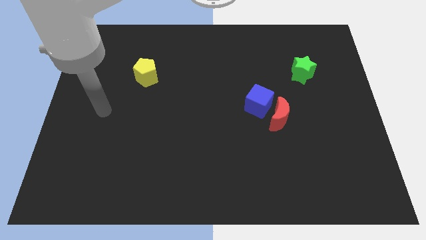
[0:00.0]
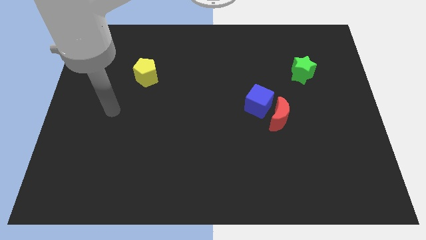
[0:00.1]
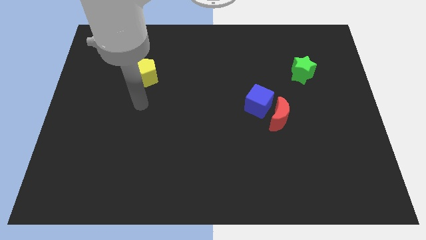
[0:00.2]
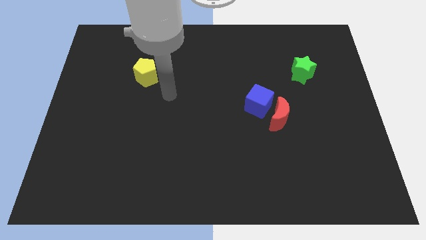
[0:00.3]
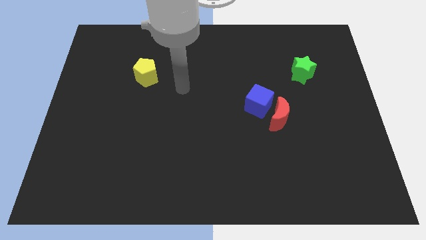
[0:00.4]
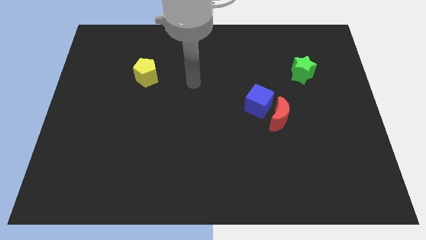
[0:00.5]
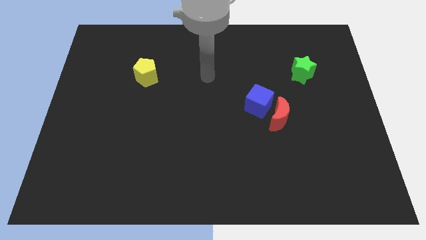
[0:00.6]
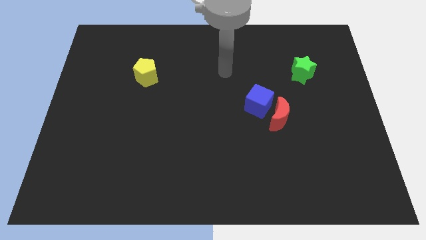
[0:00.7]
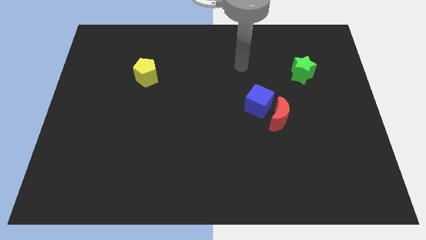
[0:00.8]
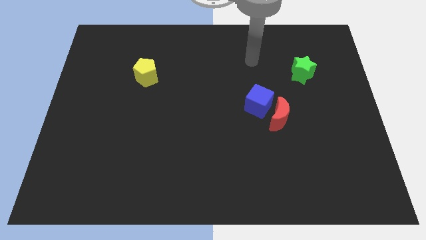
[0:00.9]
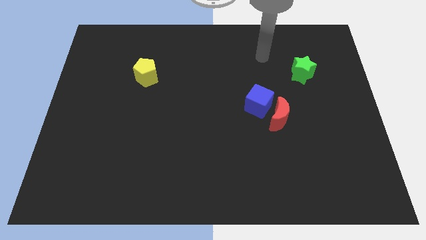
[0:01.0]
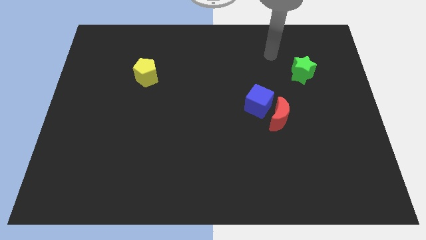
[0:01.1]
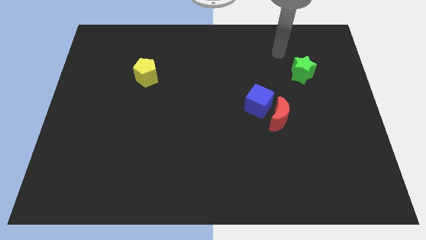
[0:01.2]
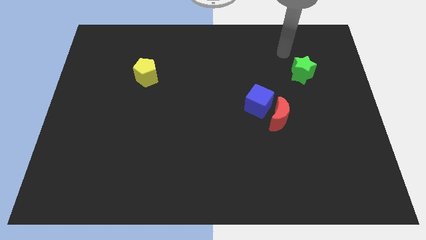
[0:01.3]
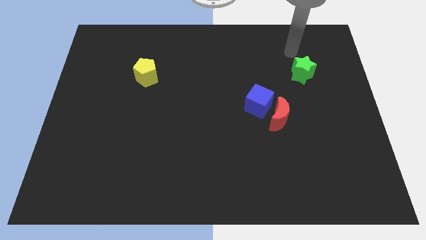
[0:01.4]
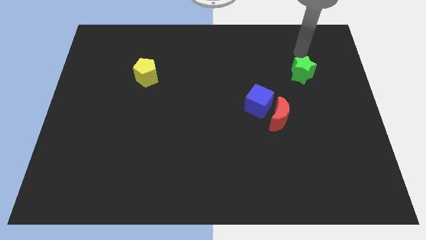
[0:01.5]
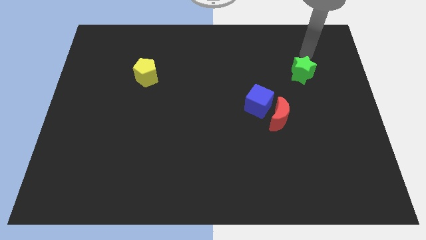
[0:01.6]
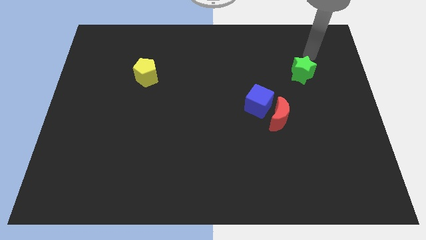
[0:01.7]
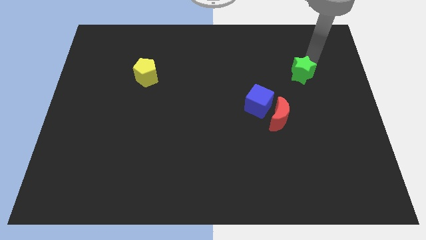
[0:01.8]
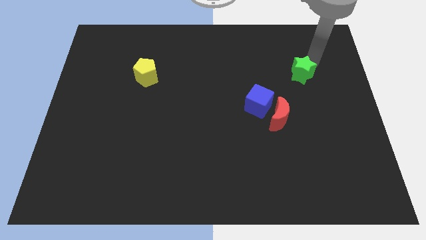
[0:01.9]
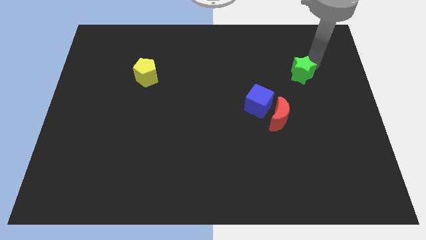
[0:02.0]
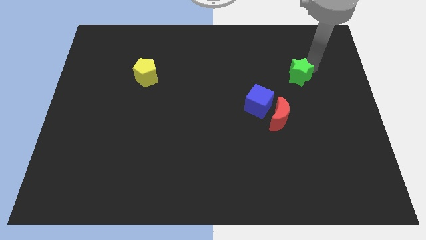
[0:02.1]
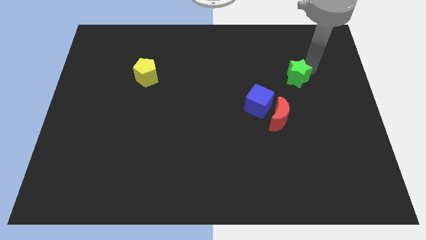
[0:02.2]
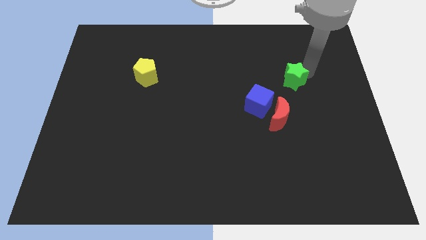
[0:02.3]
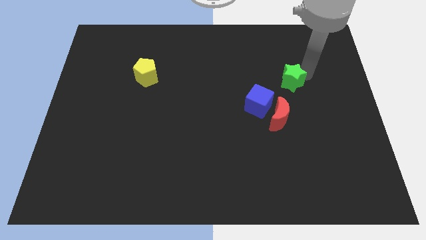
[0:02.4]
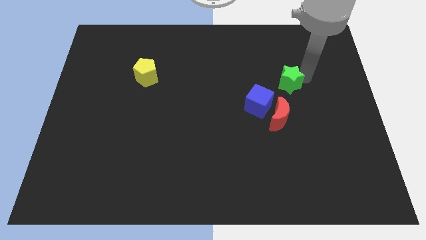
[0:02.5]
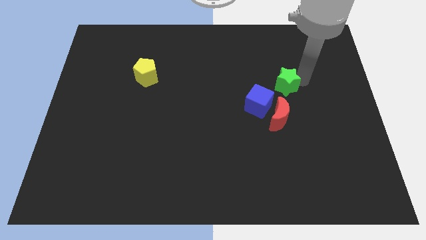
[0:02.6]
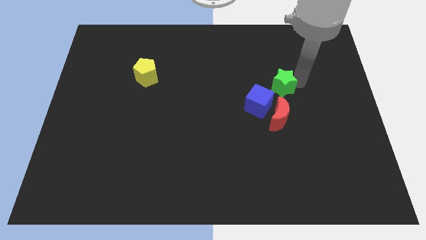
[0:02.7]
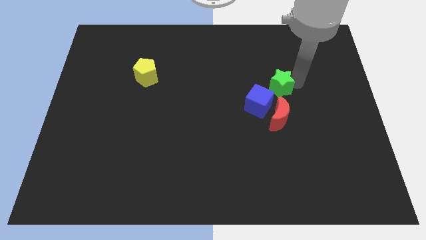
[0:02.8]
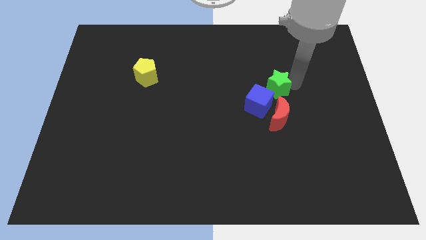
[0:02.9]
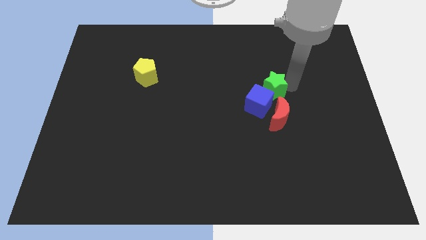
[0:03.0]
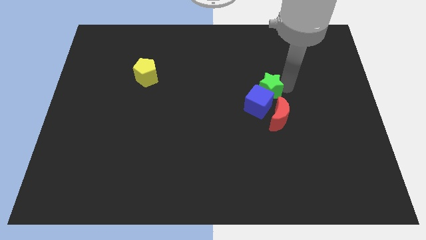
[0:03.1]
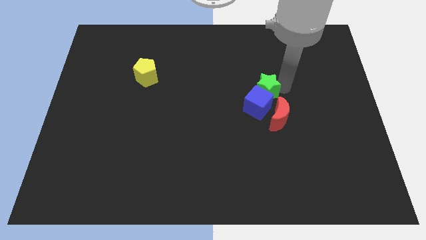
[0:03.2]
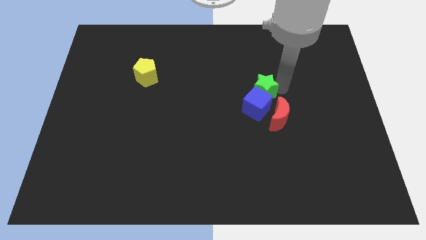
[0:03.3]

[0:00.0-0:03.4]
slide the star next to the blue block

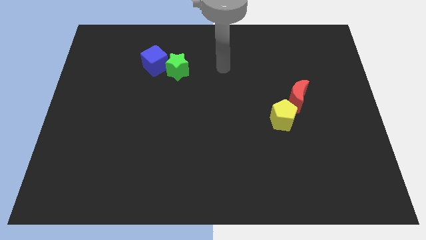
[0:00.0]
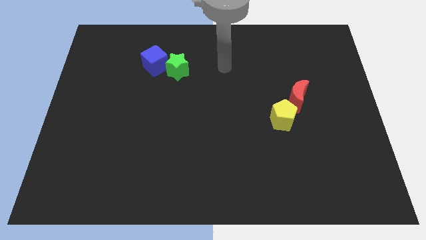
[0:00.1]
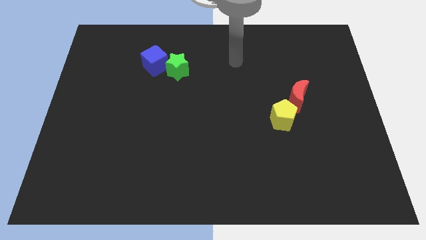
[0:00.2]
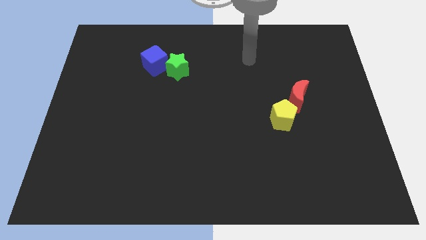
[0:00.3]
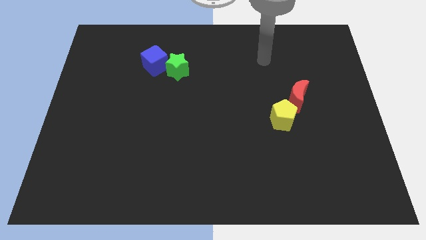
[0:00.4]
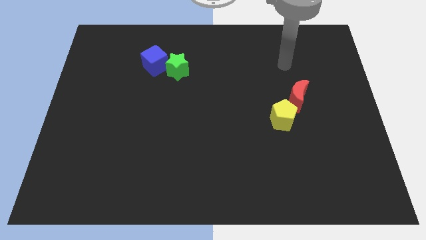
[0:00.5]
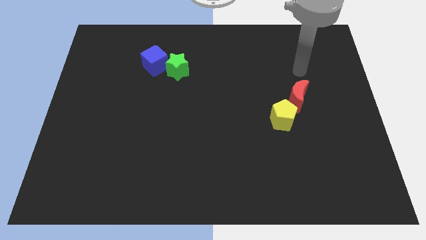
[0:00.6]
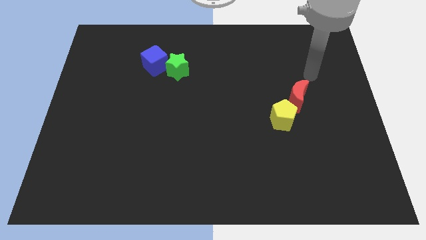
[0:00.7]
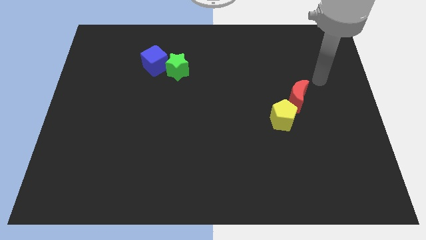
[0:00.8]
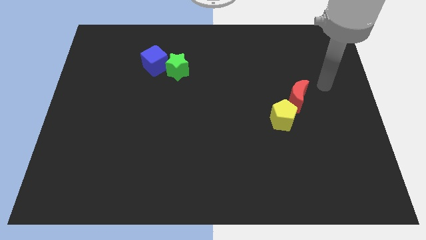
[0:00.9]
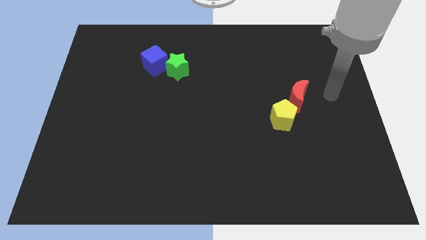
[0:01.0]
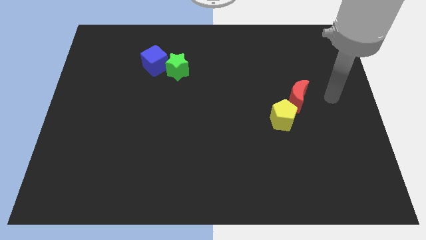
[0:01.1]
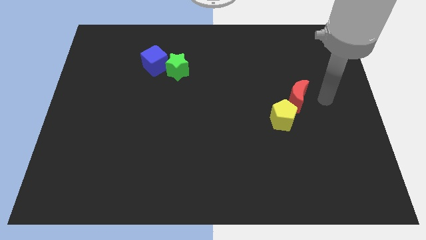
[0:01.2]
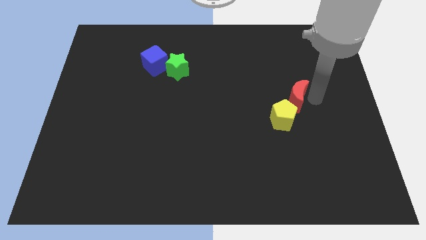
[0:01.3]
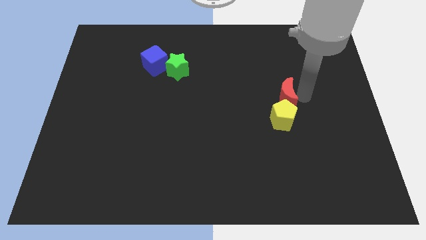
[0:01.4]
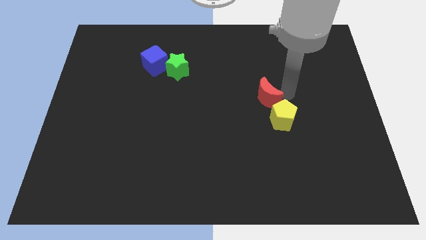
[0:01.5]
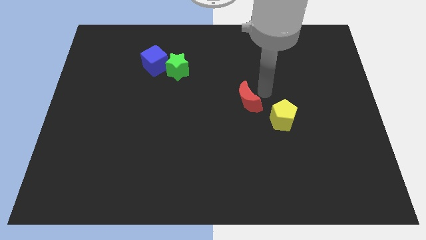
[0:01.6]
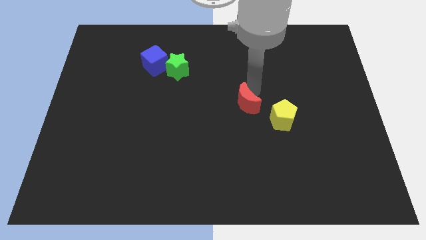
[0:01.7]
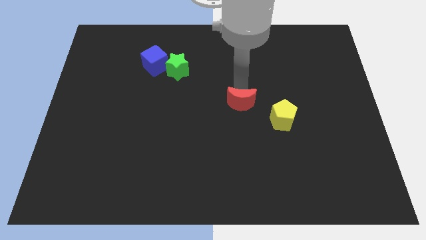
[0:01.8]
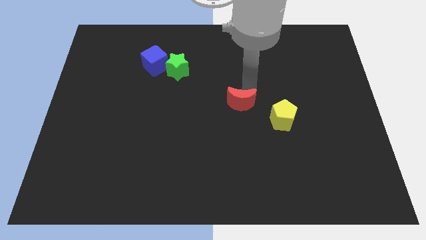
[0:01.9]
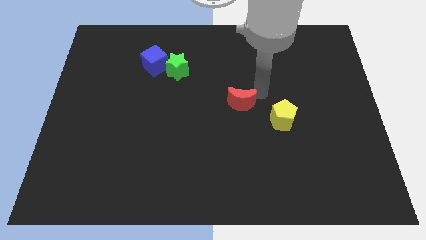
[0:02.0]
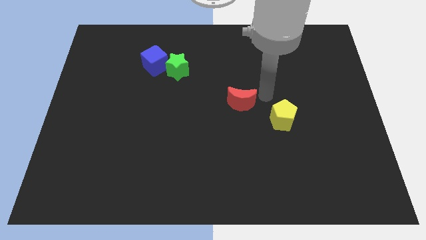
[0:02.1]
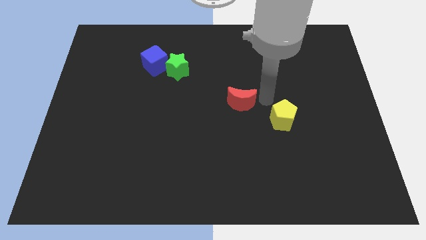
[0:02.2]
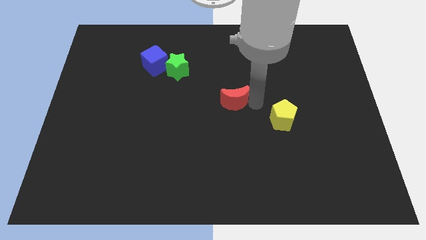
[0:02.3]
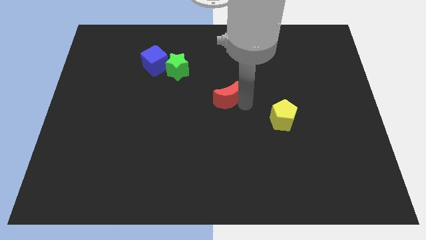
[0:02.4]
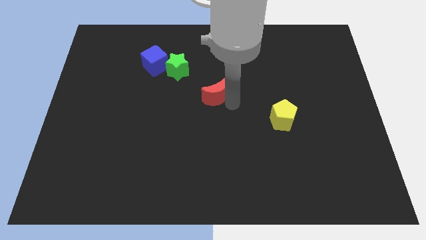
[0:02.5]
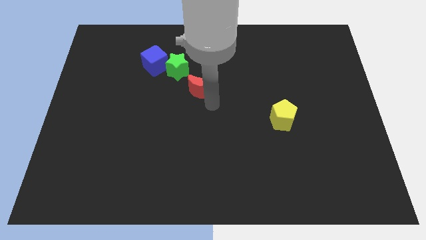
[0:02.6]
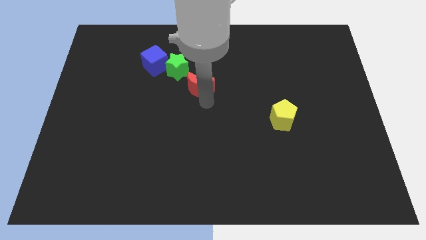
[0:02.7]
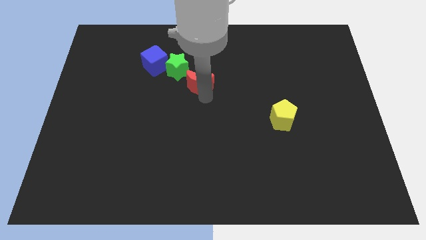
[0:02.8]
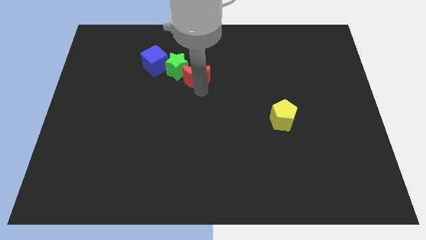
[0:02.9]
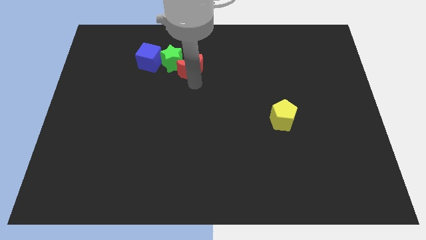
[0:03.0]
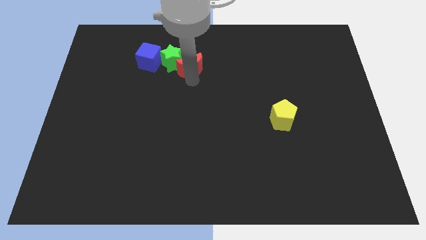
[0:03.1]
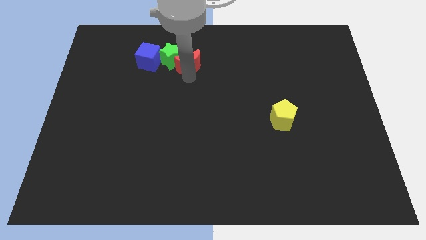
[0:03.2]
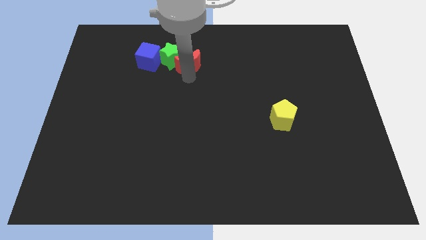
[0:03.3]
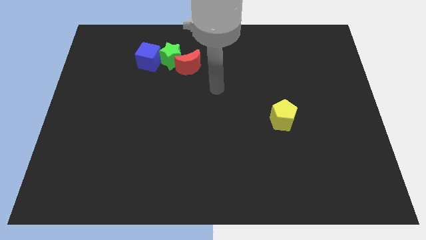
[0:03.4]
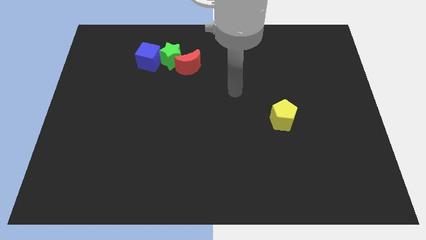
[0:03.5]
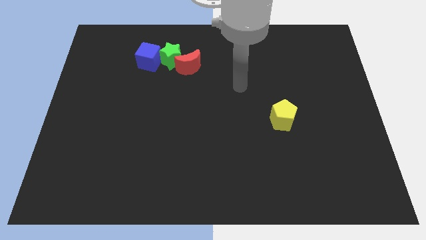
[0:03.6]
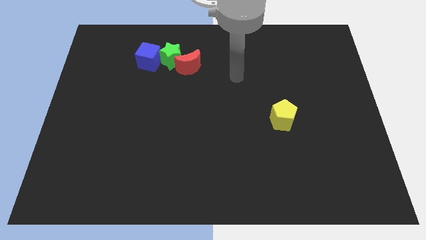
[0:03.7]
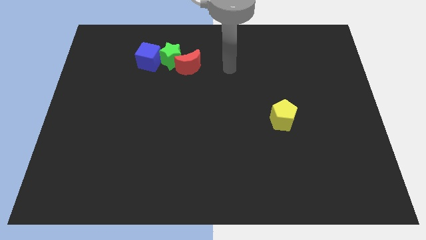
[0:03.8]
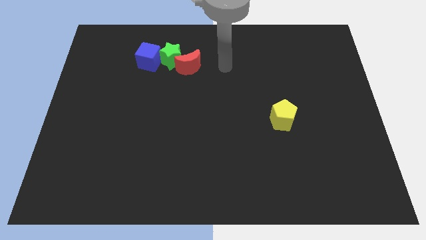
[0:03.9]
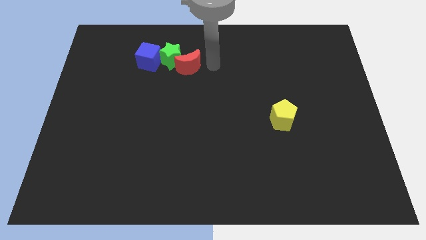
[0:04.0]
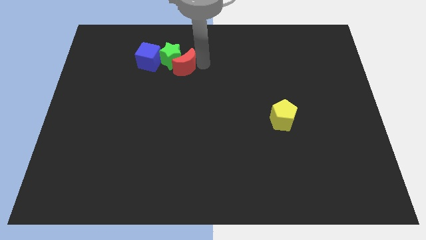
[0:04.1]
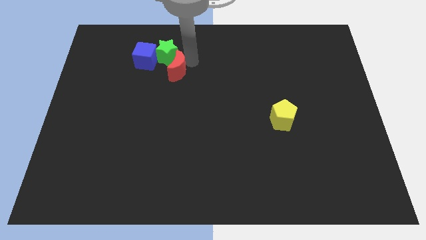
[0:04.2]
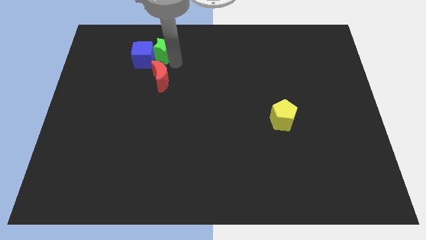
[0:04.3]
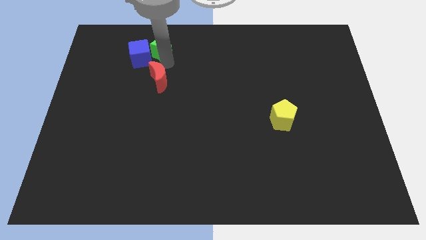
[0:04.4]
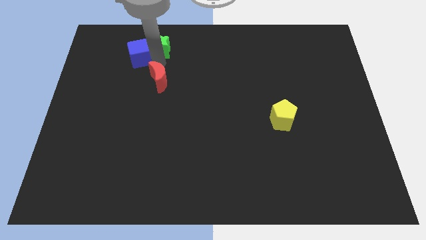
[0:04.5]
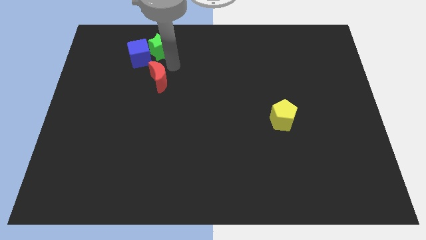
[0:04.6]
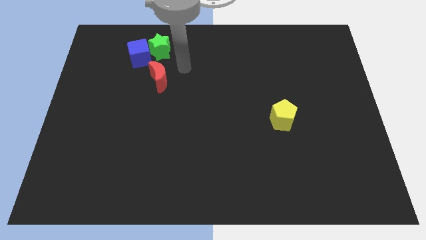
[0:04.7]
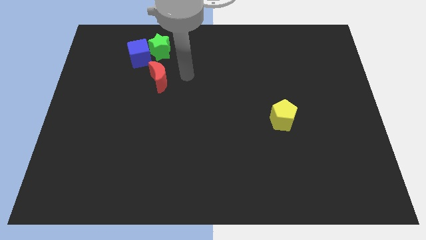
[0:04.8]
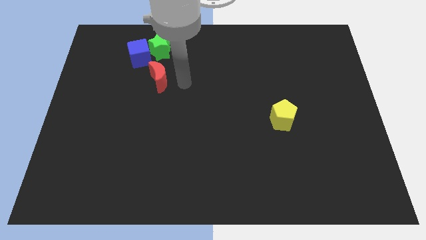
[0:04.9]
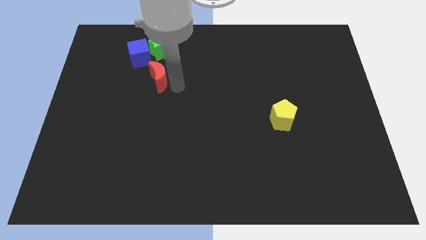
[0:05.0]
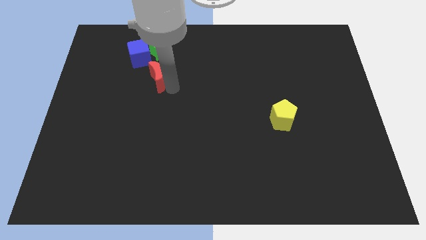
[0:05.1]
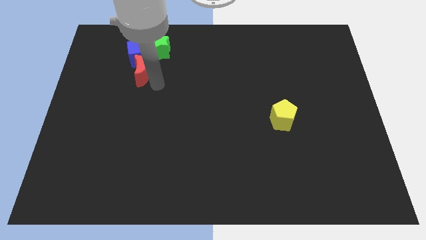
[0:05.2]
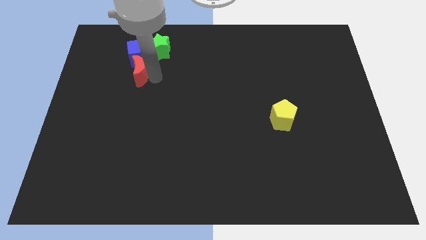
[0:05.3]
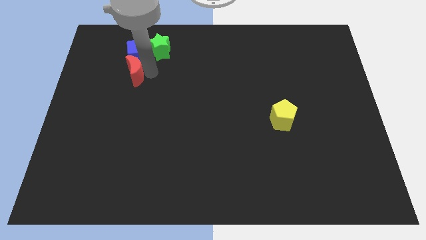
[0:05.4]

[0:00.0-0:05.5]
push the red moon towards the blue block
